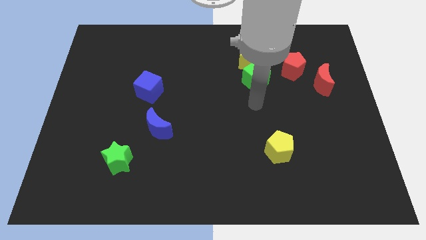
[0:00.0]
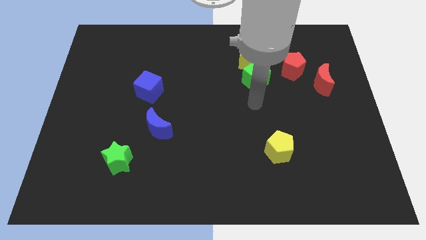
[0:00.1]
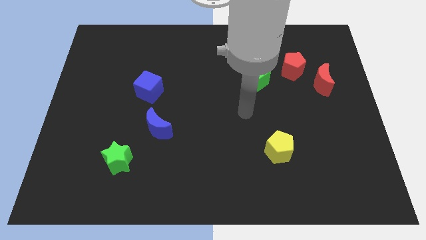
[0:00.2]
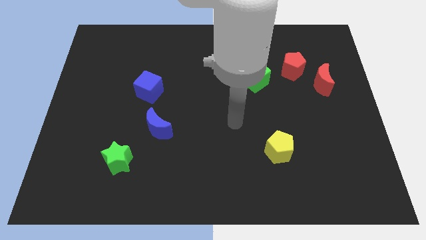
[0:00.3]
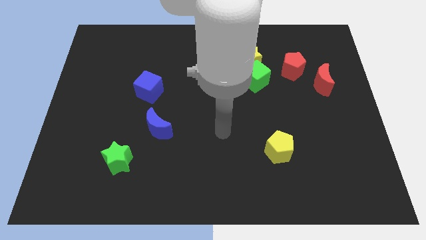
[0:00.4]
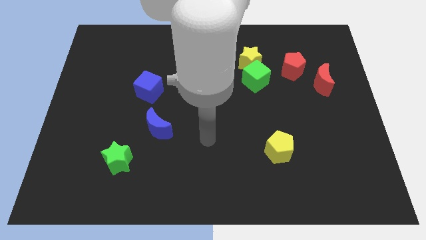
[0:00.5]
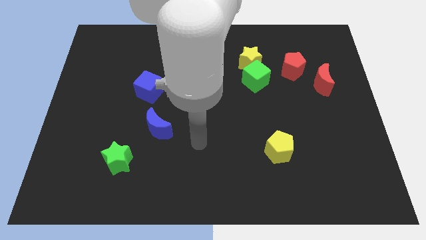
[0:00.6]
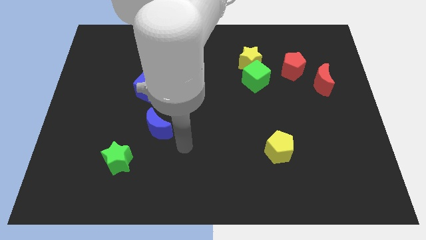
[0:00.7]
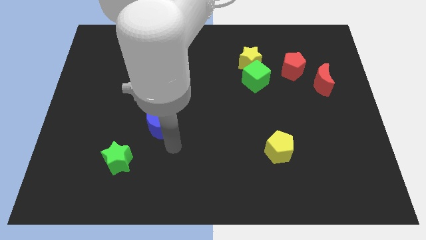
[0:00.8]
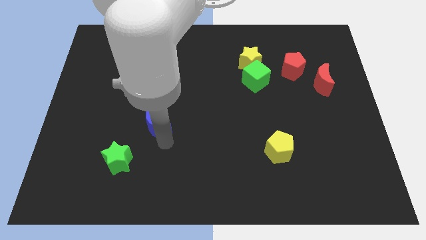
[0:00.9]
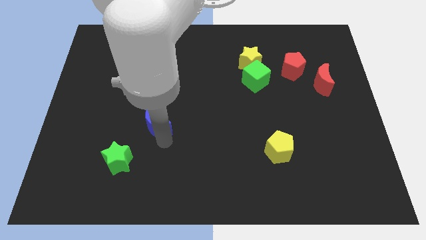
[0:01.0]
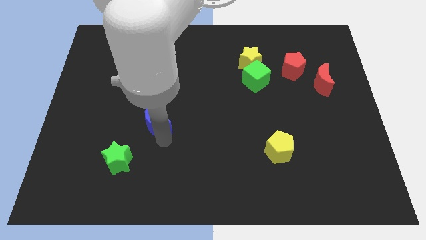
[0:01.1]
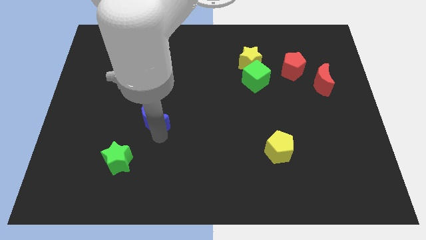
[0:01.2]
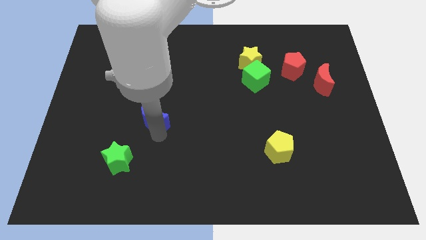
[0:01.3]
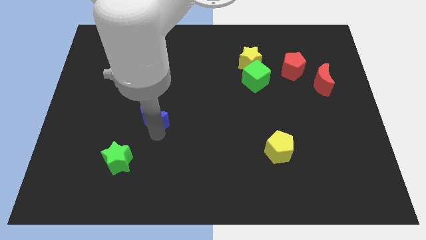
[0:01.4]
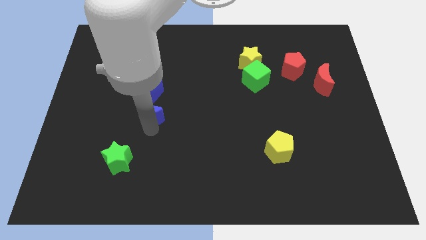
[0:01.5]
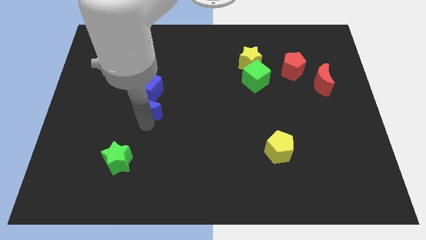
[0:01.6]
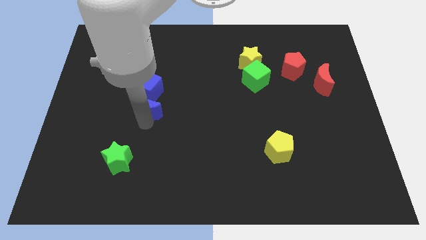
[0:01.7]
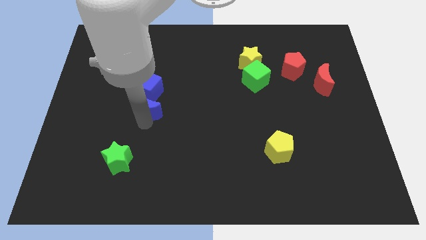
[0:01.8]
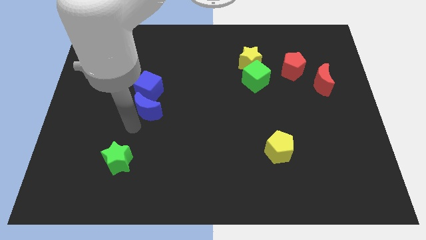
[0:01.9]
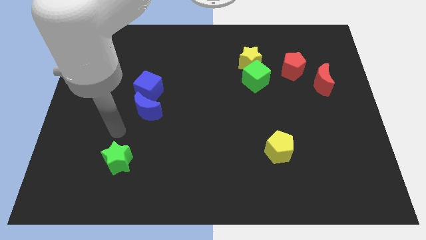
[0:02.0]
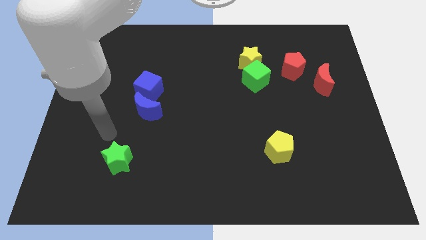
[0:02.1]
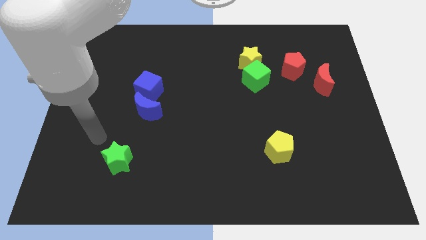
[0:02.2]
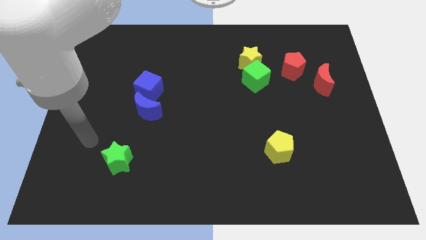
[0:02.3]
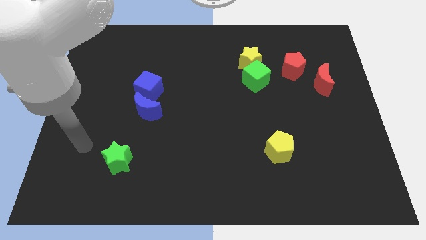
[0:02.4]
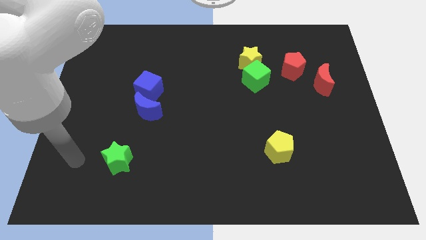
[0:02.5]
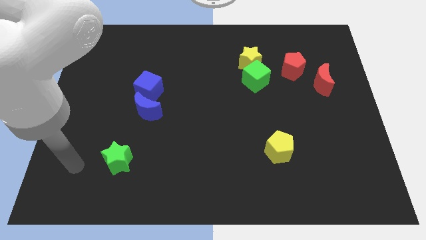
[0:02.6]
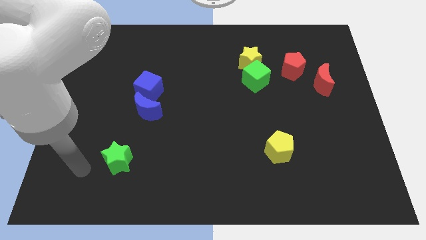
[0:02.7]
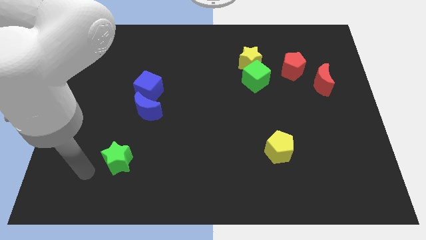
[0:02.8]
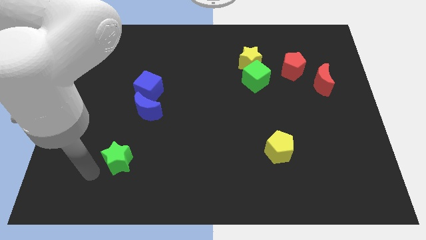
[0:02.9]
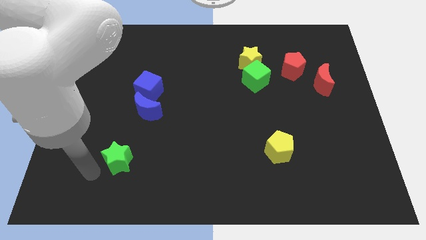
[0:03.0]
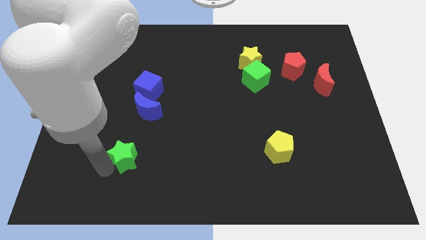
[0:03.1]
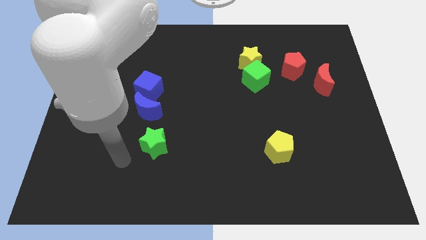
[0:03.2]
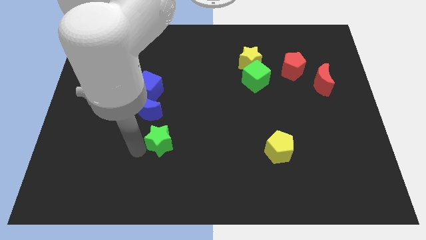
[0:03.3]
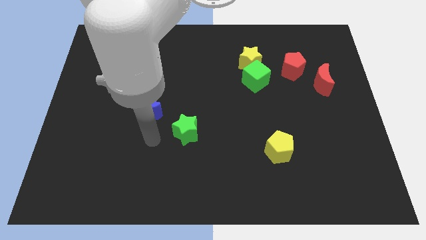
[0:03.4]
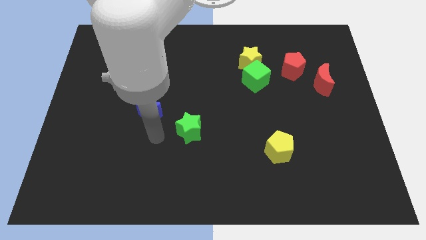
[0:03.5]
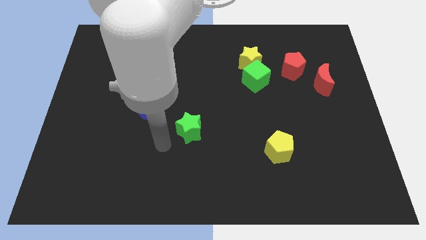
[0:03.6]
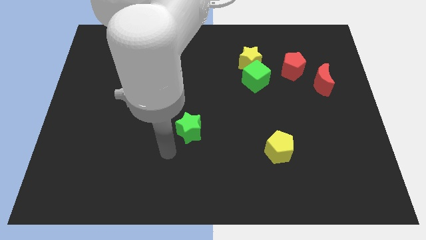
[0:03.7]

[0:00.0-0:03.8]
move the blue moon close to the blue cube

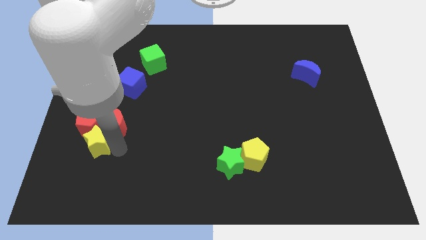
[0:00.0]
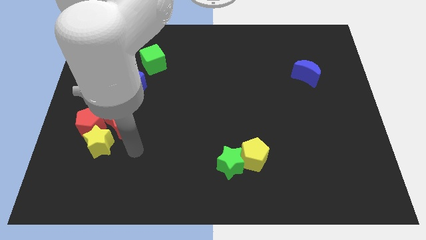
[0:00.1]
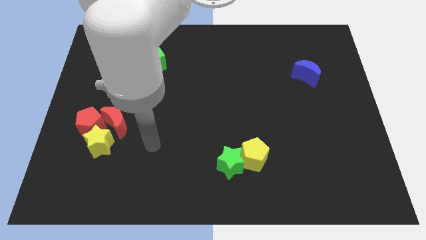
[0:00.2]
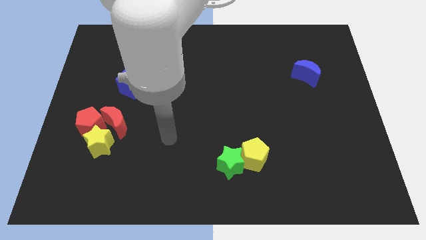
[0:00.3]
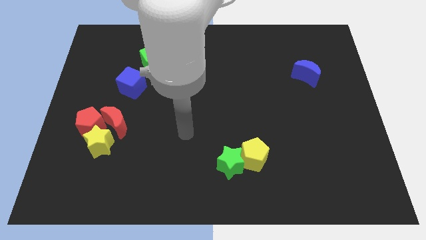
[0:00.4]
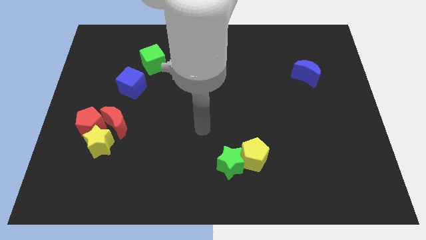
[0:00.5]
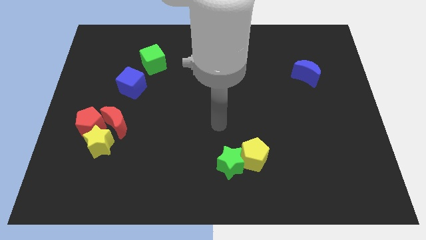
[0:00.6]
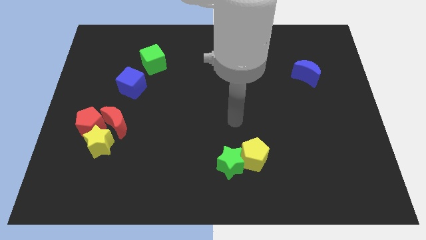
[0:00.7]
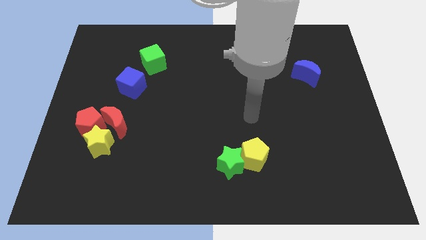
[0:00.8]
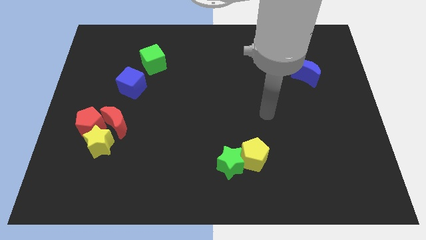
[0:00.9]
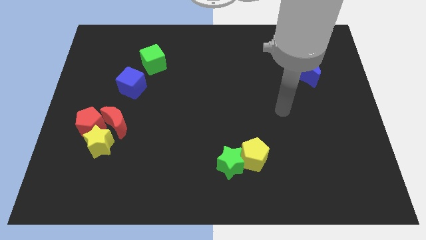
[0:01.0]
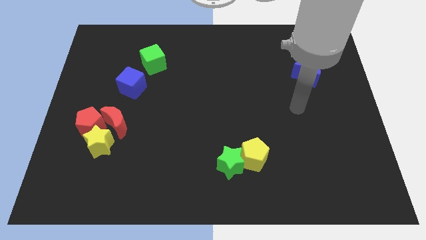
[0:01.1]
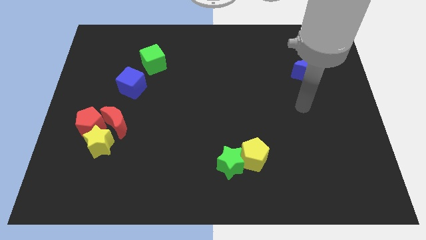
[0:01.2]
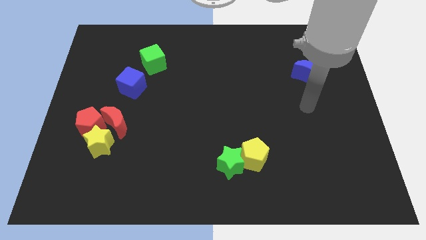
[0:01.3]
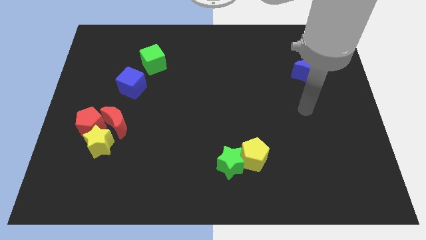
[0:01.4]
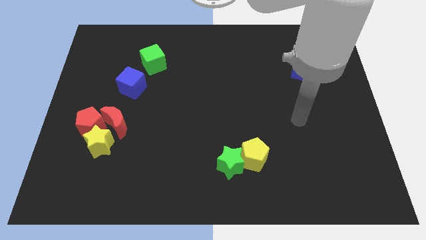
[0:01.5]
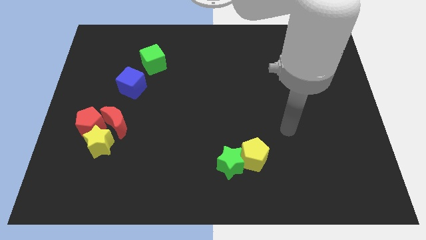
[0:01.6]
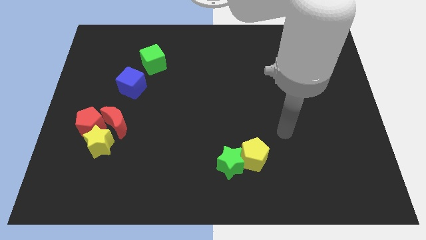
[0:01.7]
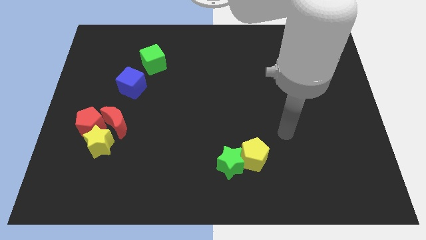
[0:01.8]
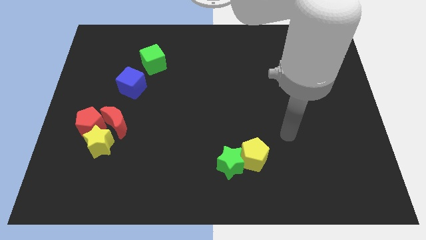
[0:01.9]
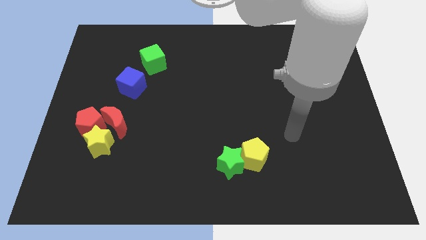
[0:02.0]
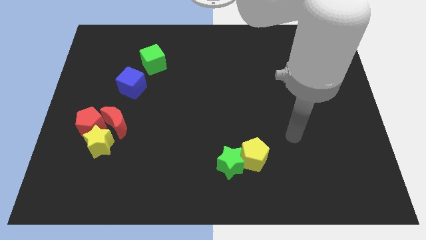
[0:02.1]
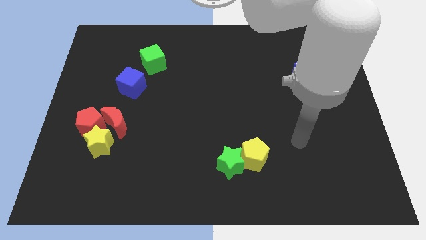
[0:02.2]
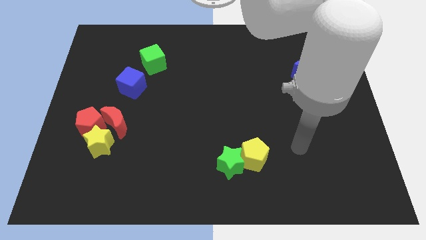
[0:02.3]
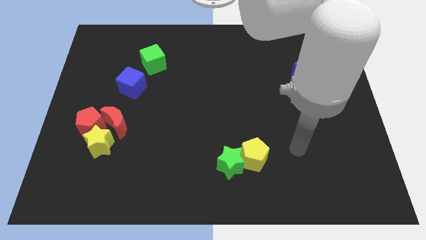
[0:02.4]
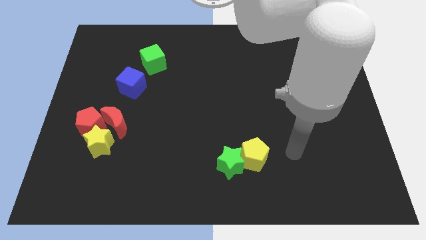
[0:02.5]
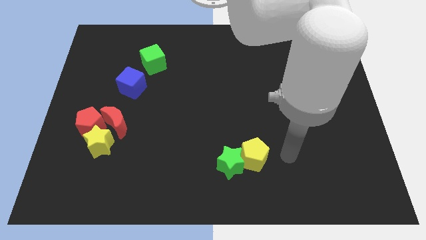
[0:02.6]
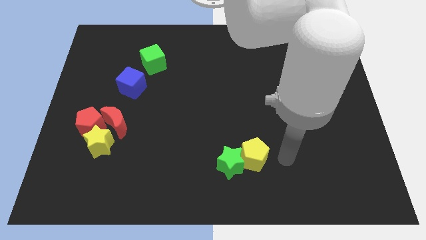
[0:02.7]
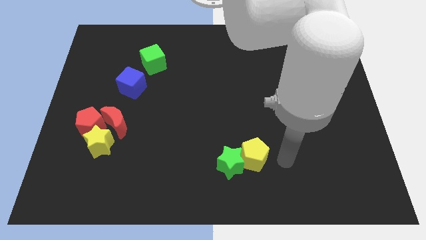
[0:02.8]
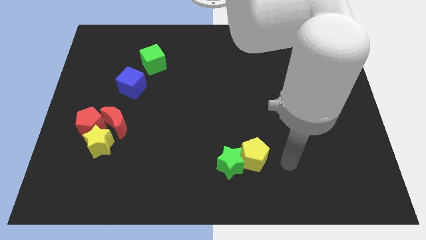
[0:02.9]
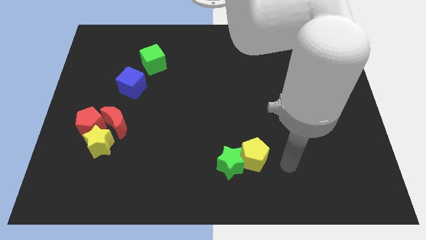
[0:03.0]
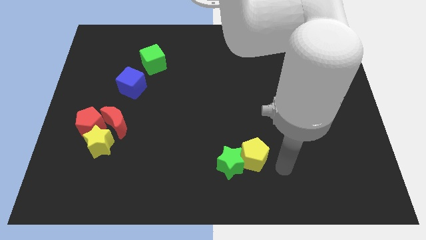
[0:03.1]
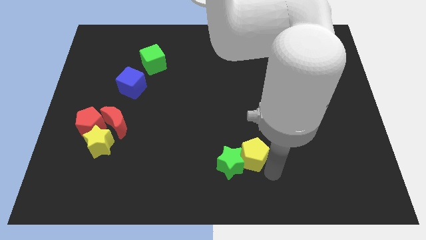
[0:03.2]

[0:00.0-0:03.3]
move your arm to the right side of the yellow pentagon

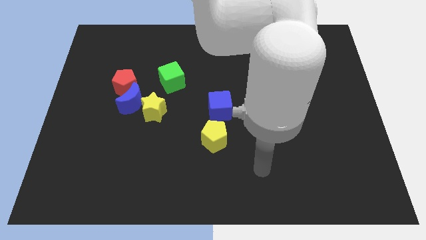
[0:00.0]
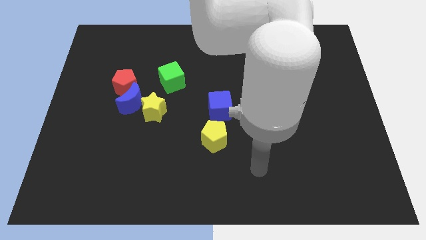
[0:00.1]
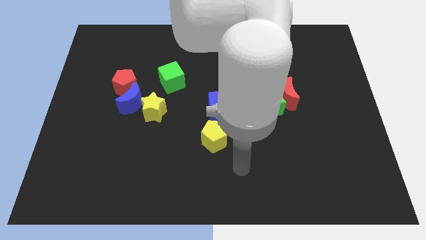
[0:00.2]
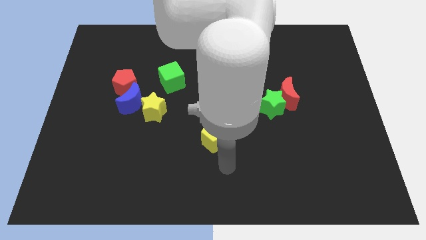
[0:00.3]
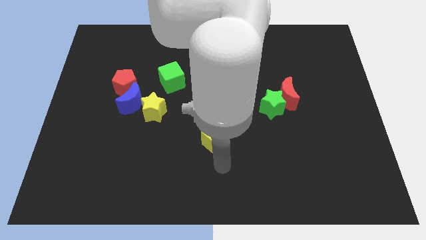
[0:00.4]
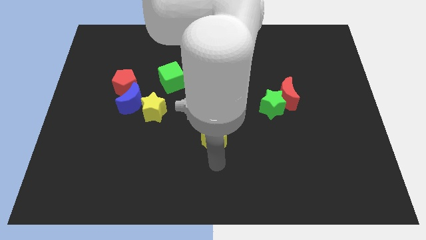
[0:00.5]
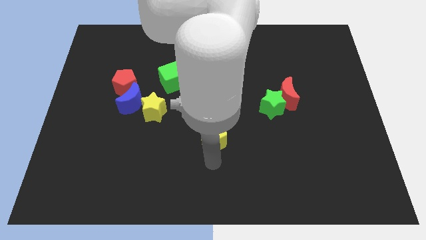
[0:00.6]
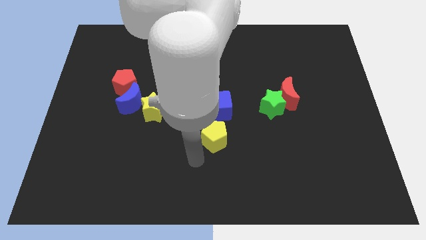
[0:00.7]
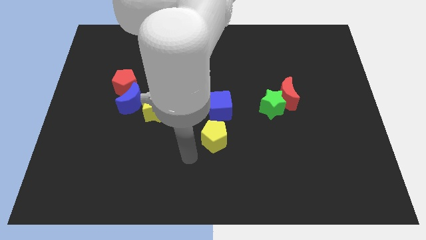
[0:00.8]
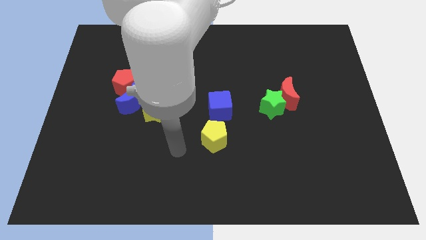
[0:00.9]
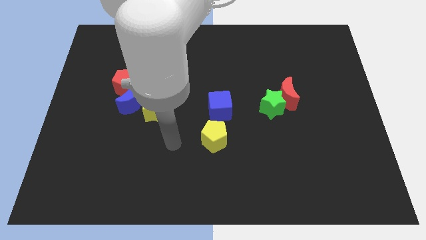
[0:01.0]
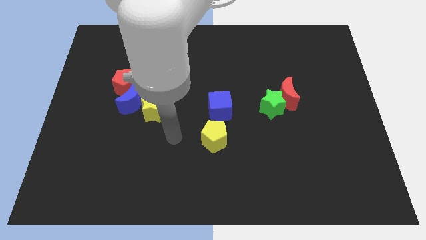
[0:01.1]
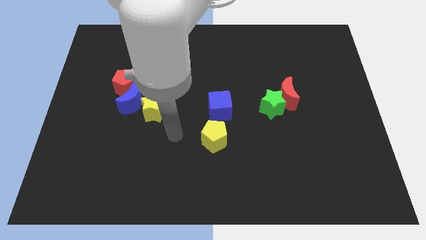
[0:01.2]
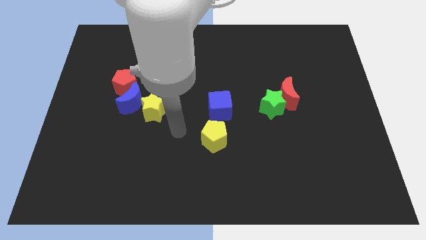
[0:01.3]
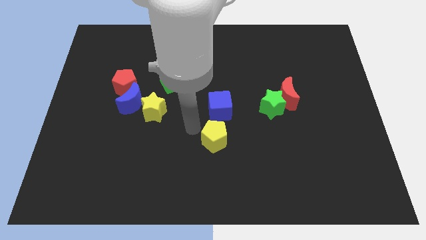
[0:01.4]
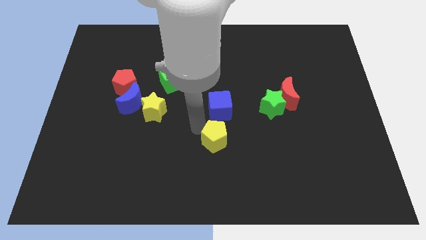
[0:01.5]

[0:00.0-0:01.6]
move your arm to the left of yellow pentagon

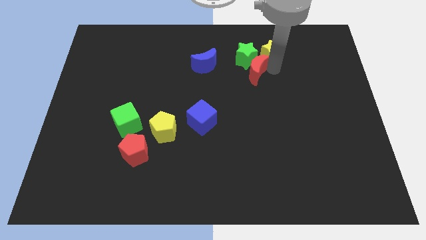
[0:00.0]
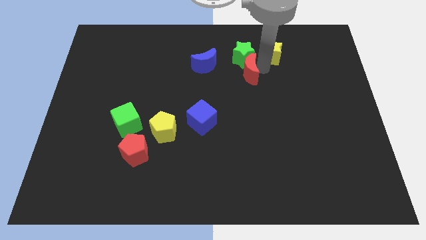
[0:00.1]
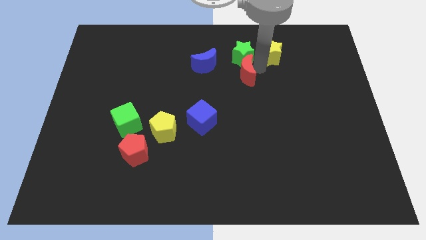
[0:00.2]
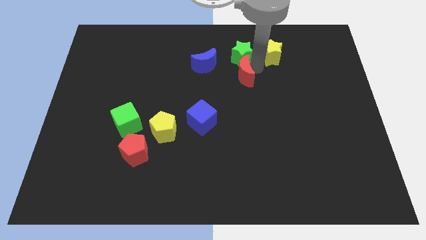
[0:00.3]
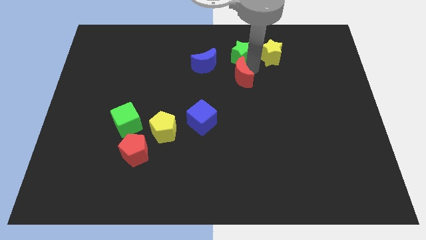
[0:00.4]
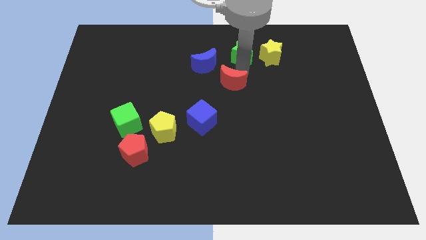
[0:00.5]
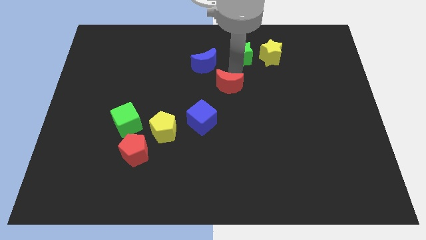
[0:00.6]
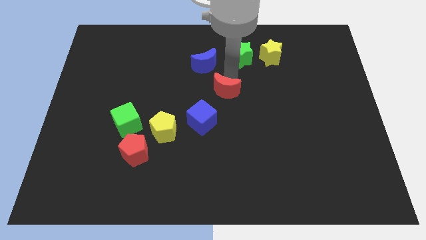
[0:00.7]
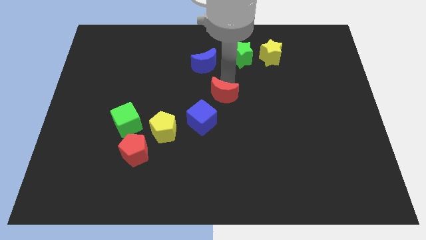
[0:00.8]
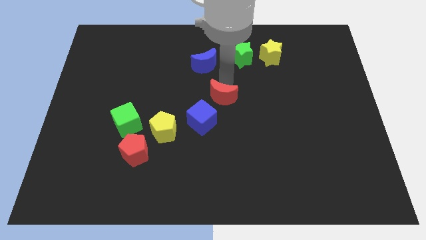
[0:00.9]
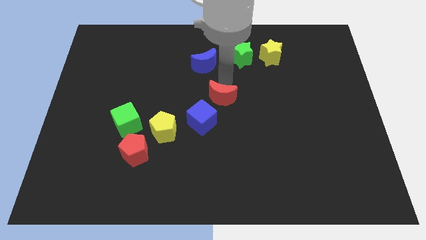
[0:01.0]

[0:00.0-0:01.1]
slide red moon towards blue cube
